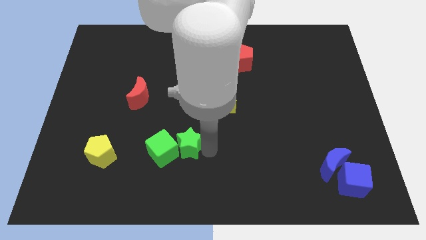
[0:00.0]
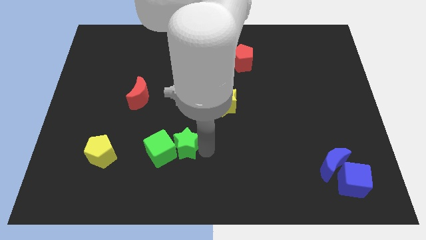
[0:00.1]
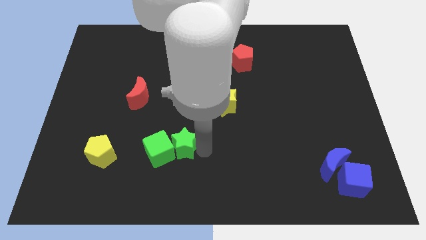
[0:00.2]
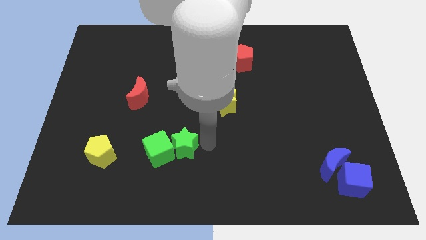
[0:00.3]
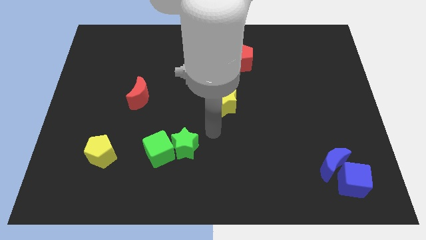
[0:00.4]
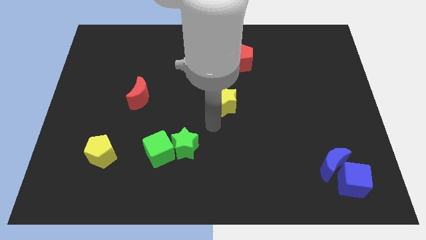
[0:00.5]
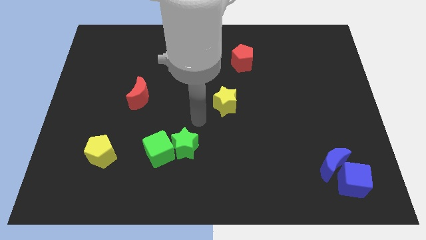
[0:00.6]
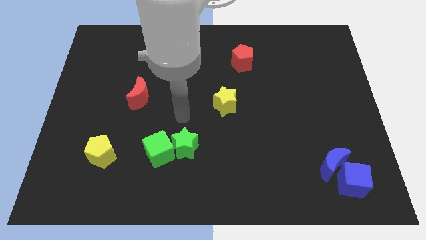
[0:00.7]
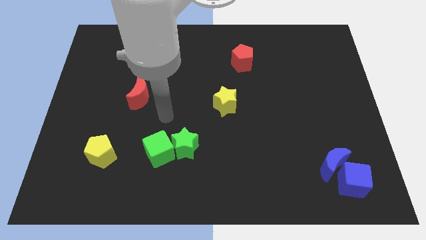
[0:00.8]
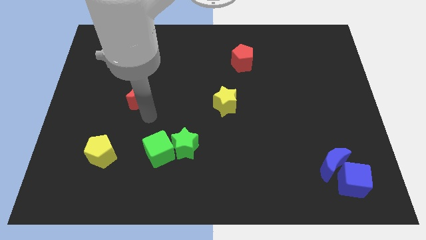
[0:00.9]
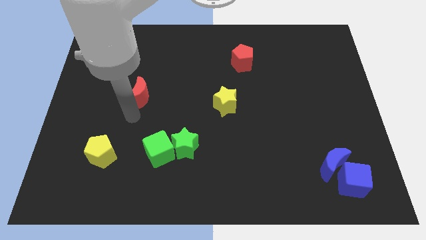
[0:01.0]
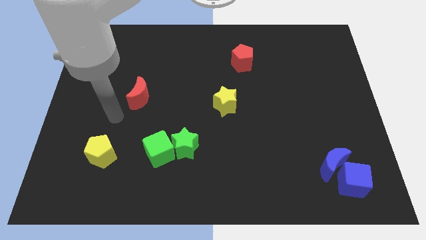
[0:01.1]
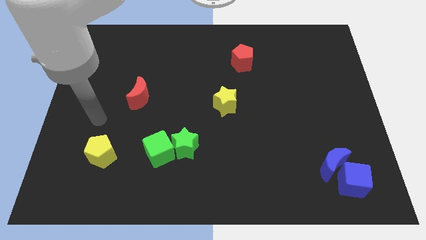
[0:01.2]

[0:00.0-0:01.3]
move your arm away from the green star

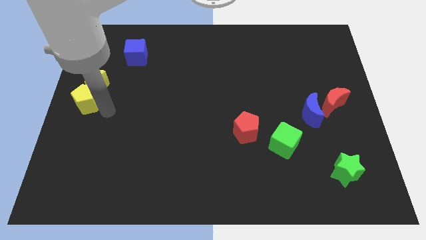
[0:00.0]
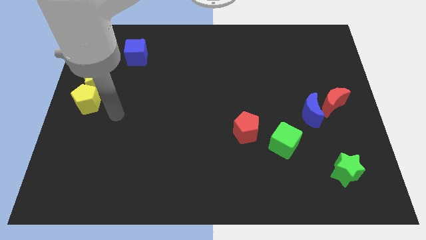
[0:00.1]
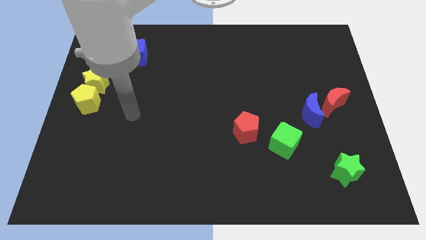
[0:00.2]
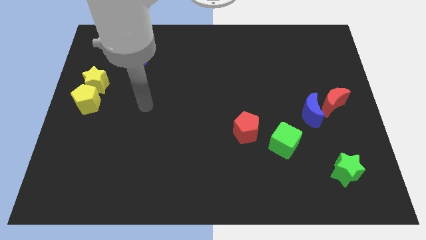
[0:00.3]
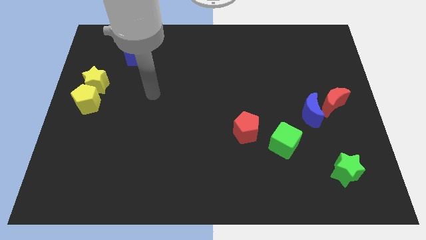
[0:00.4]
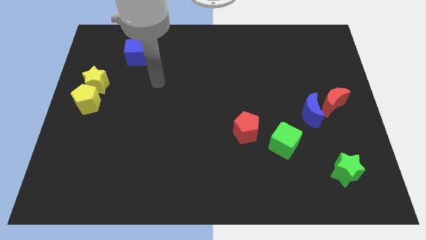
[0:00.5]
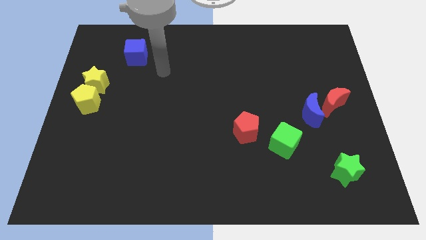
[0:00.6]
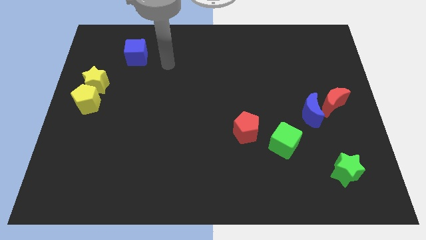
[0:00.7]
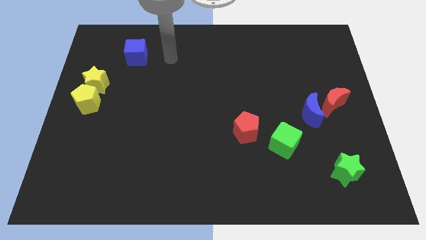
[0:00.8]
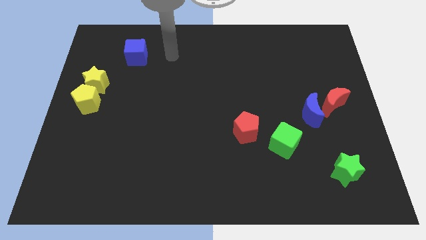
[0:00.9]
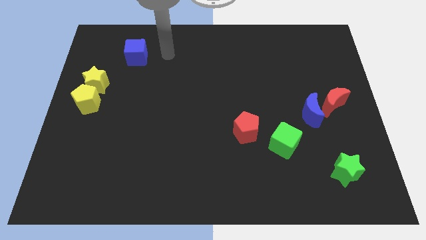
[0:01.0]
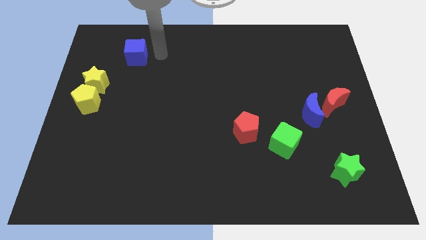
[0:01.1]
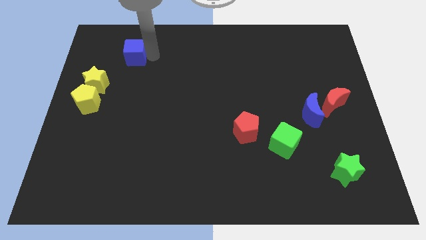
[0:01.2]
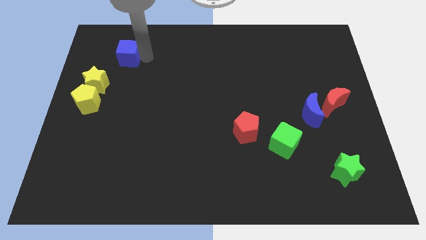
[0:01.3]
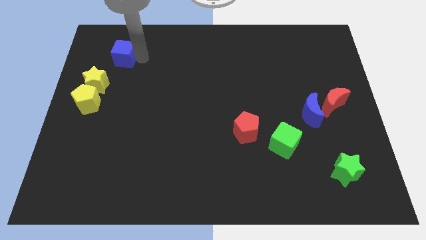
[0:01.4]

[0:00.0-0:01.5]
move your arm away from yellow pentagon

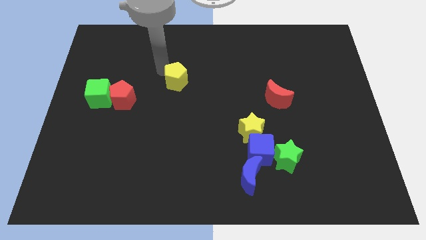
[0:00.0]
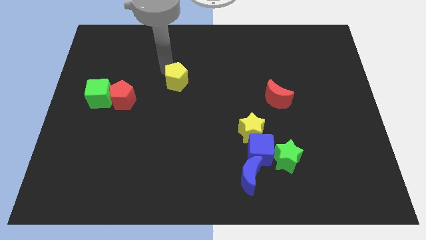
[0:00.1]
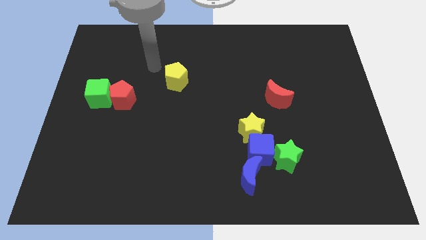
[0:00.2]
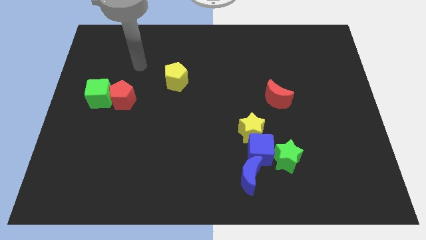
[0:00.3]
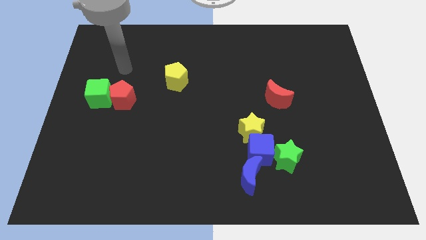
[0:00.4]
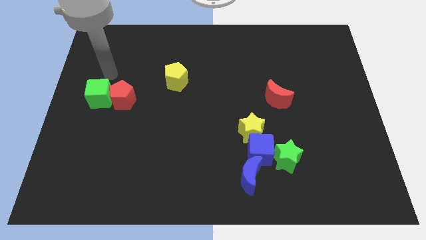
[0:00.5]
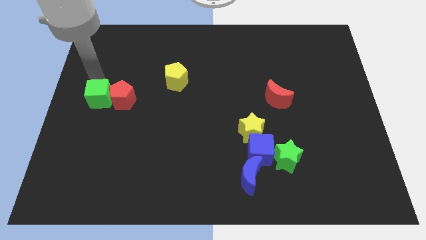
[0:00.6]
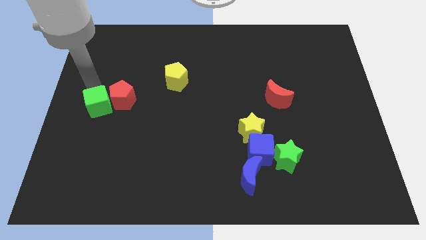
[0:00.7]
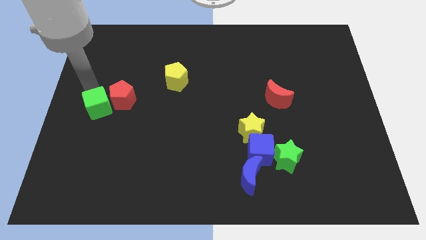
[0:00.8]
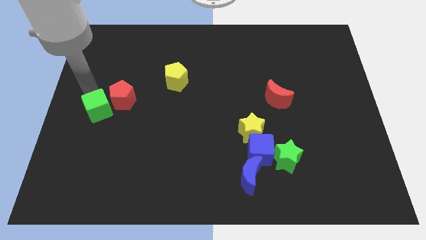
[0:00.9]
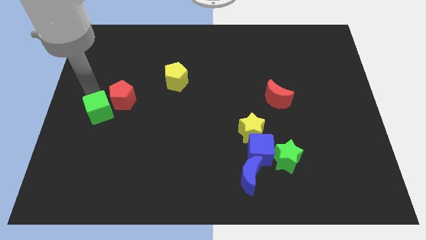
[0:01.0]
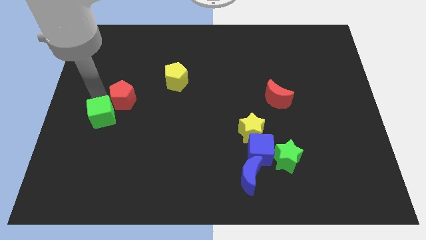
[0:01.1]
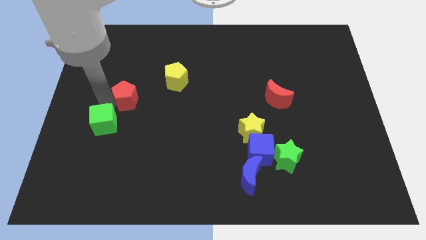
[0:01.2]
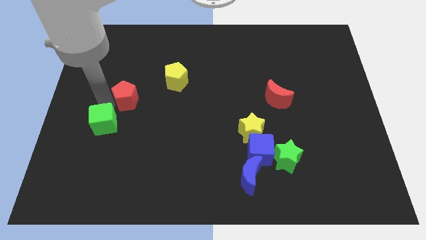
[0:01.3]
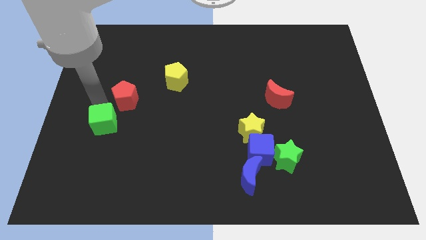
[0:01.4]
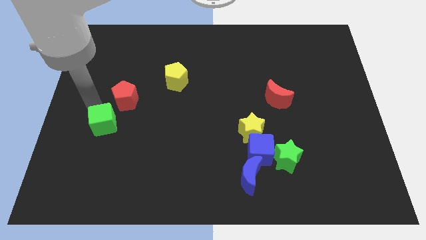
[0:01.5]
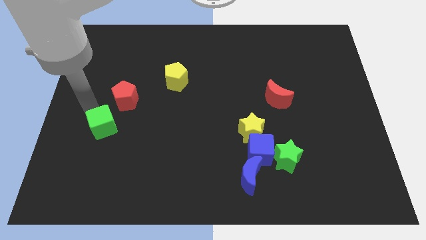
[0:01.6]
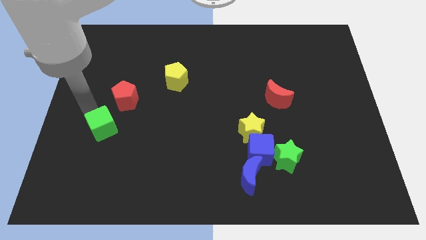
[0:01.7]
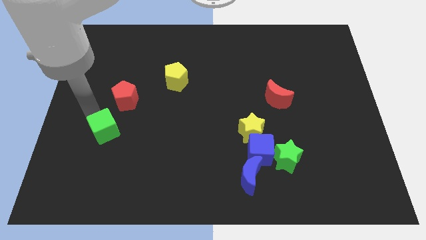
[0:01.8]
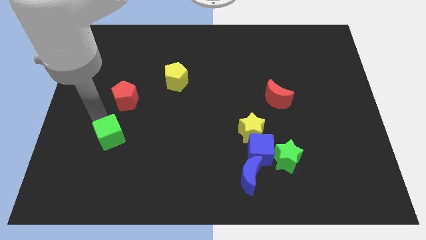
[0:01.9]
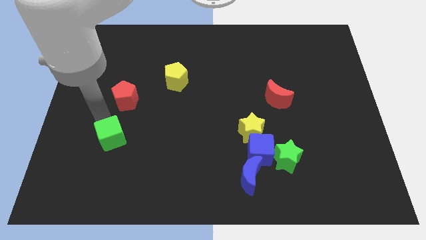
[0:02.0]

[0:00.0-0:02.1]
slide green cube to the bottom of the red pentagon

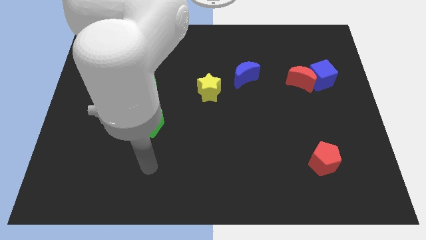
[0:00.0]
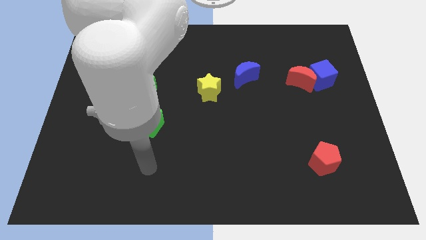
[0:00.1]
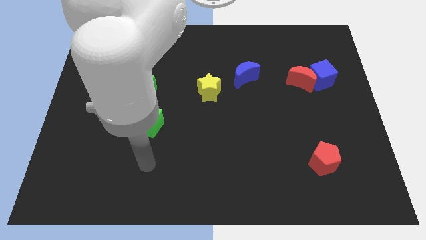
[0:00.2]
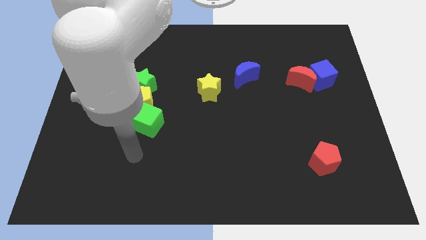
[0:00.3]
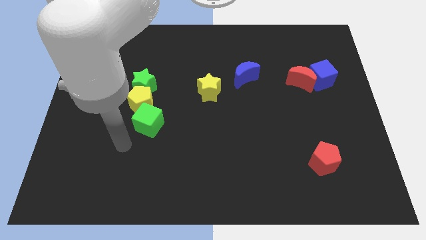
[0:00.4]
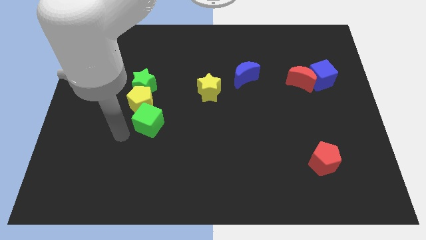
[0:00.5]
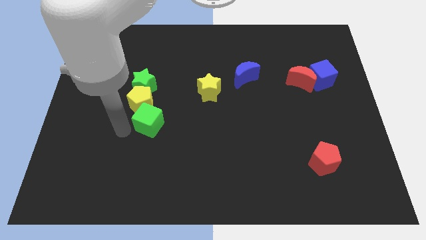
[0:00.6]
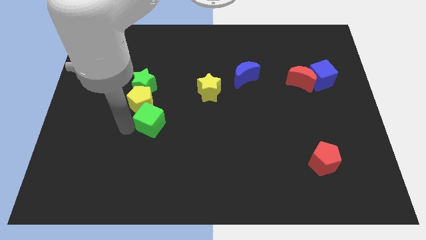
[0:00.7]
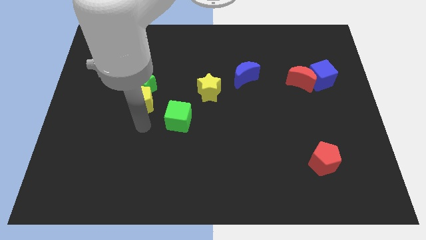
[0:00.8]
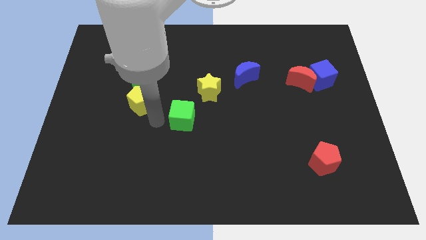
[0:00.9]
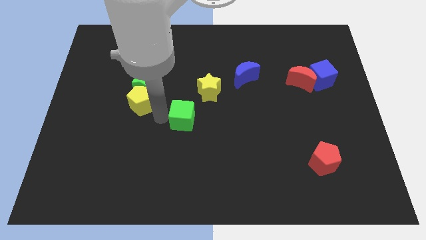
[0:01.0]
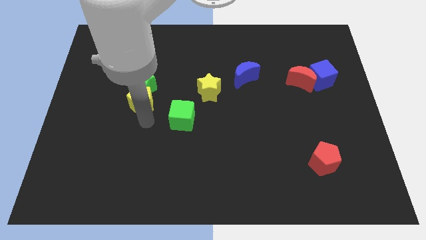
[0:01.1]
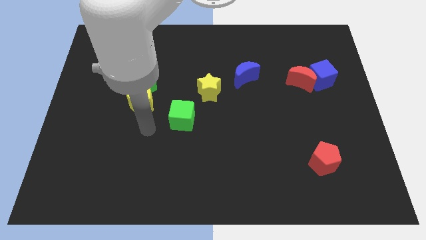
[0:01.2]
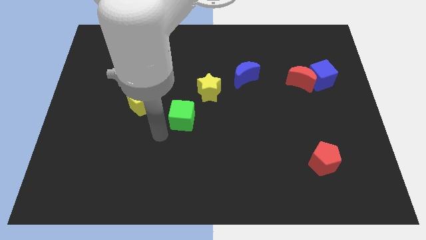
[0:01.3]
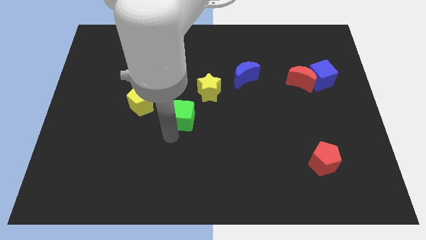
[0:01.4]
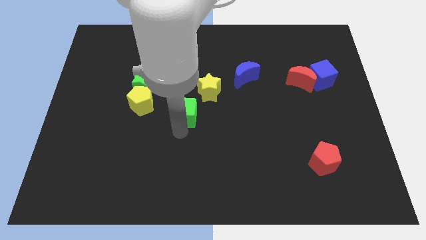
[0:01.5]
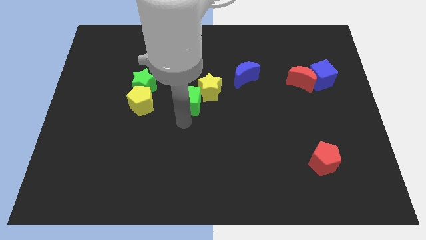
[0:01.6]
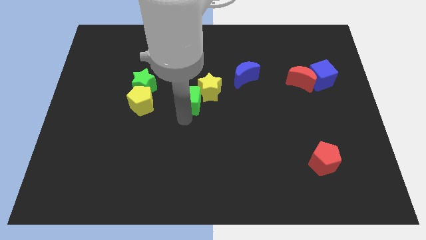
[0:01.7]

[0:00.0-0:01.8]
move the green cube into the bottom left side of the yellow star

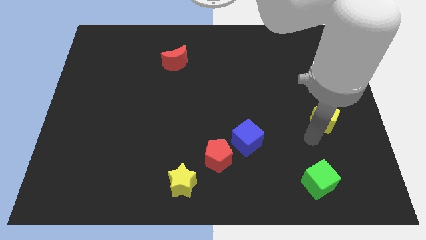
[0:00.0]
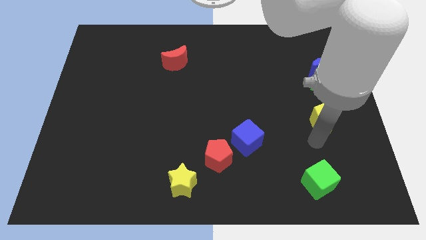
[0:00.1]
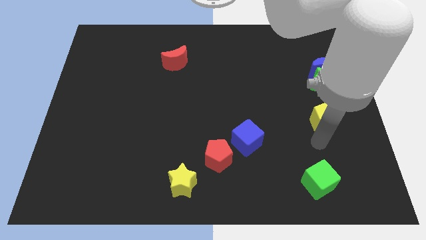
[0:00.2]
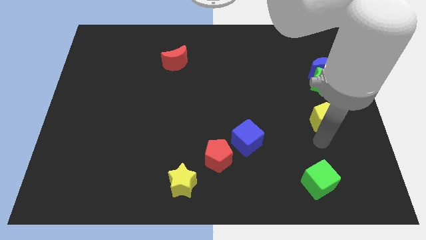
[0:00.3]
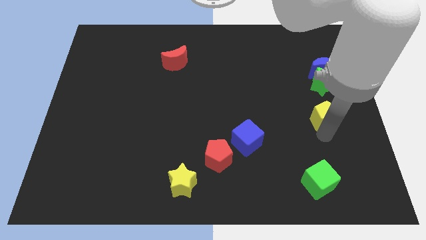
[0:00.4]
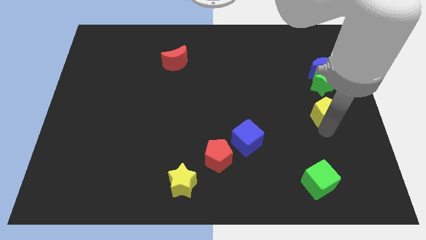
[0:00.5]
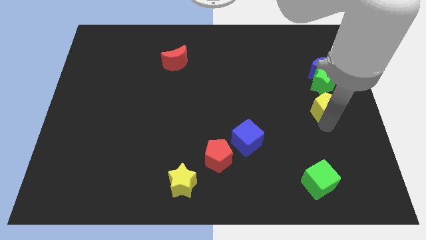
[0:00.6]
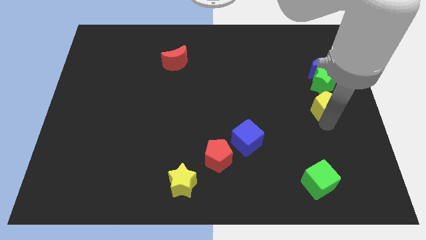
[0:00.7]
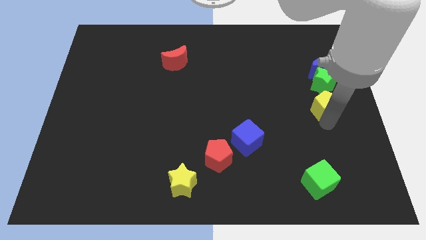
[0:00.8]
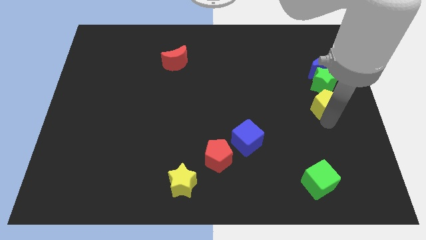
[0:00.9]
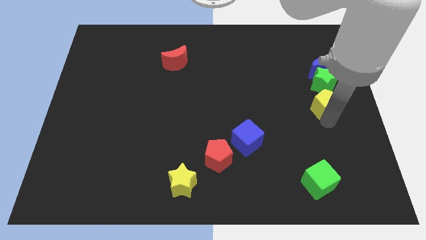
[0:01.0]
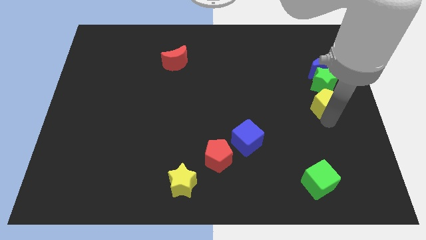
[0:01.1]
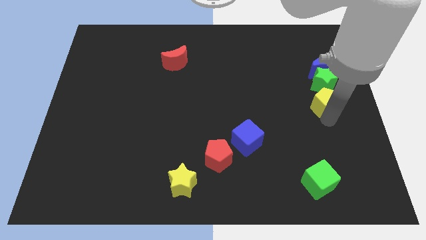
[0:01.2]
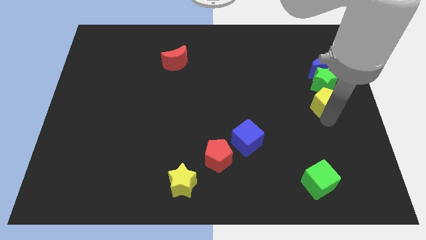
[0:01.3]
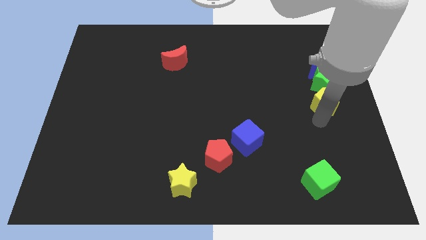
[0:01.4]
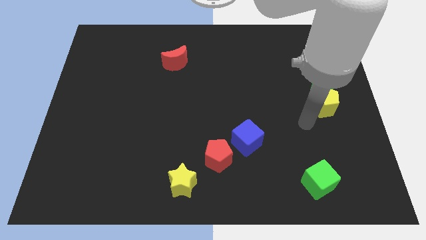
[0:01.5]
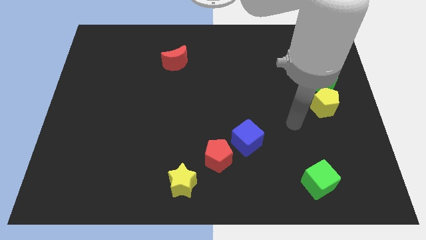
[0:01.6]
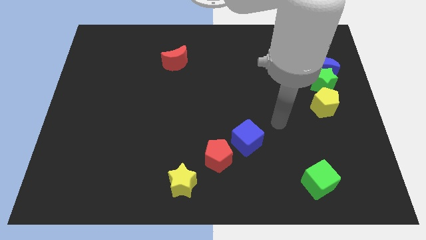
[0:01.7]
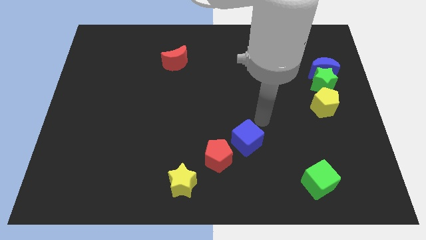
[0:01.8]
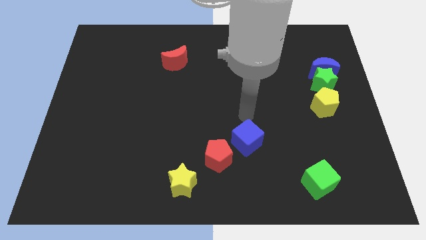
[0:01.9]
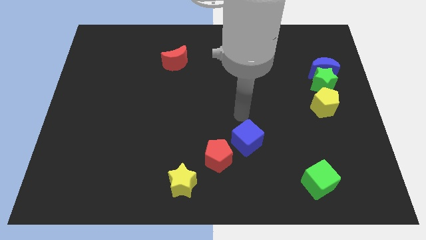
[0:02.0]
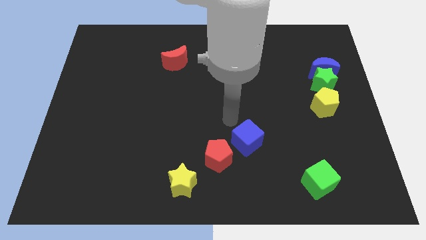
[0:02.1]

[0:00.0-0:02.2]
slide the yellow pentagon at the bottom of the green star
